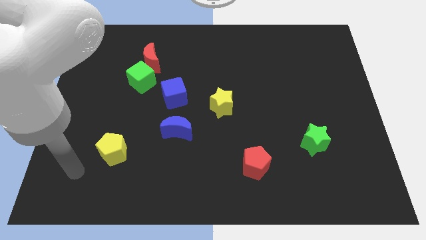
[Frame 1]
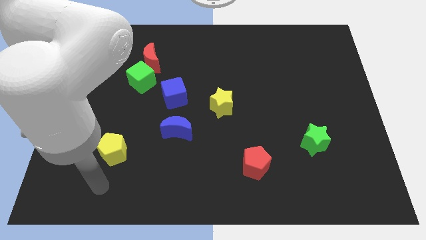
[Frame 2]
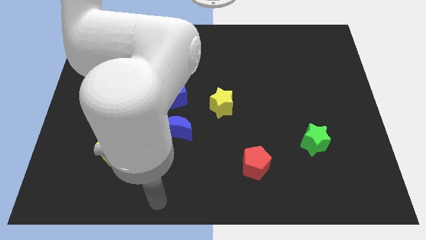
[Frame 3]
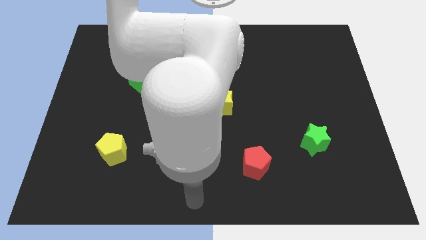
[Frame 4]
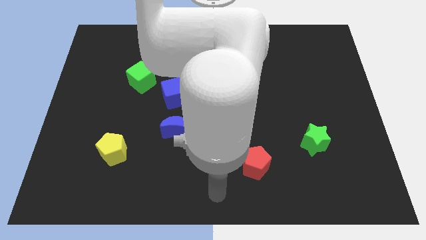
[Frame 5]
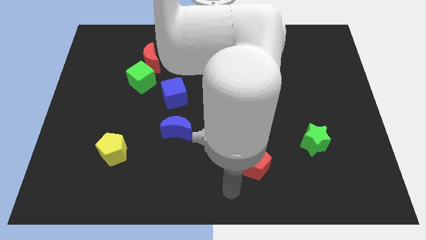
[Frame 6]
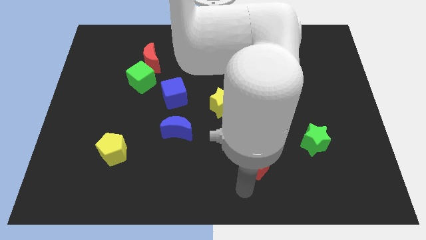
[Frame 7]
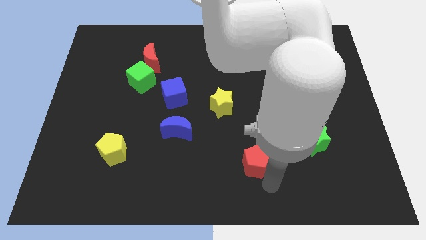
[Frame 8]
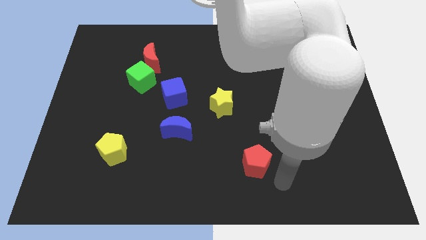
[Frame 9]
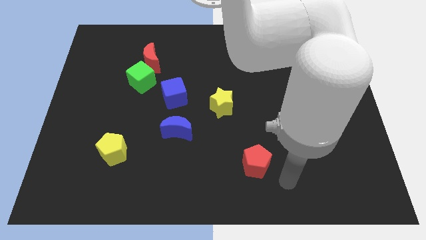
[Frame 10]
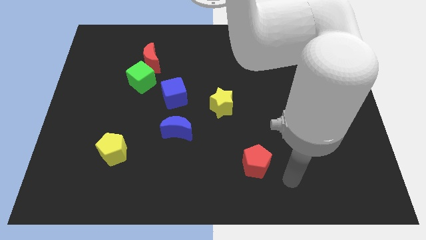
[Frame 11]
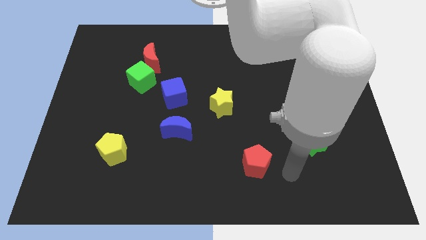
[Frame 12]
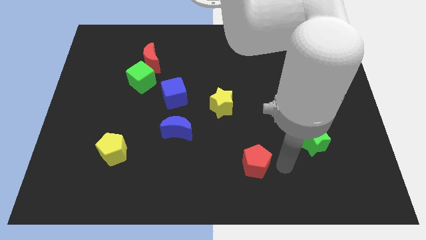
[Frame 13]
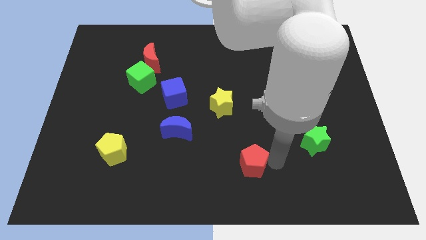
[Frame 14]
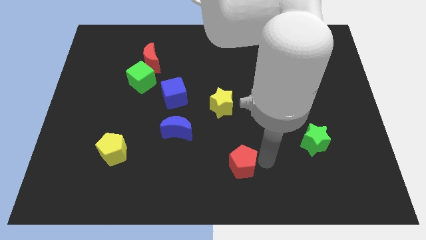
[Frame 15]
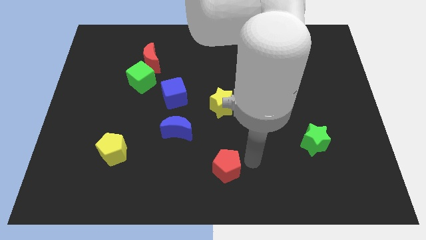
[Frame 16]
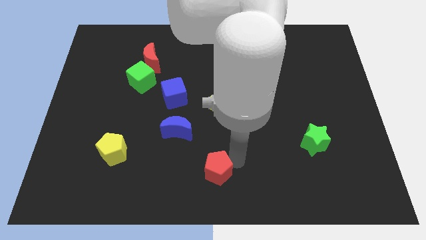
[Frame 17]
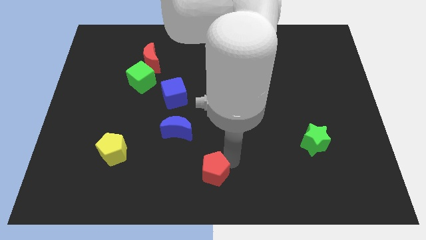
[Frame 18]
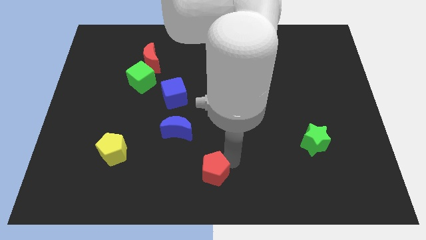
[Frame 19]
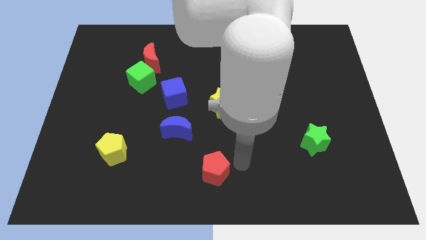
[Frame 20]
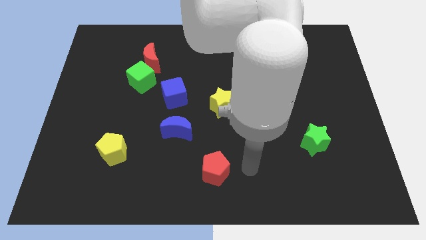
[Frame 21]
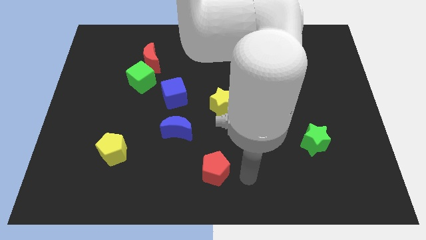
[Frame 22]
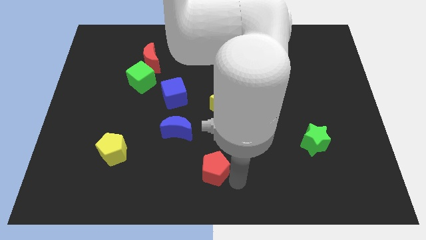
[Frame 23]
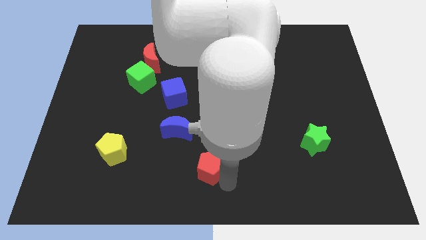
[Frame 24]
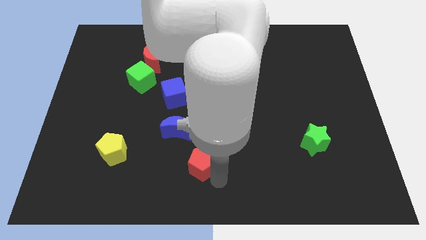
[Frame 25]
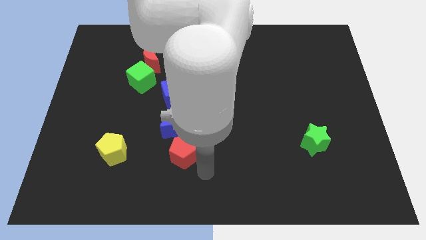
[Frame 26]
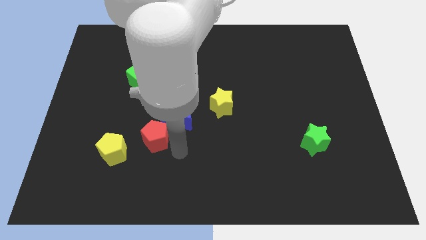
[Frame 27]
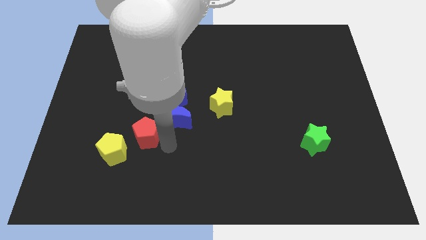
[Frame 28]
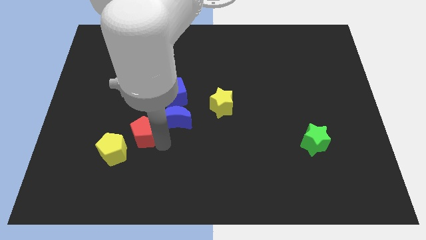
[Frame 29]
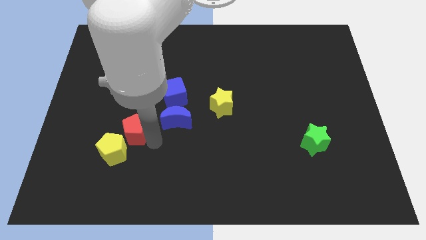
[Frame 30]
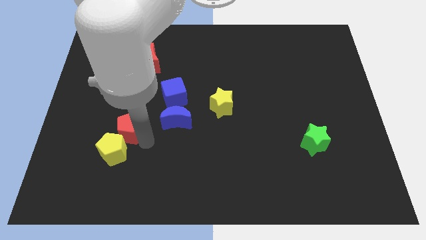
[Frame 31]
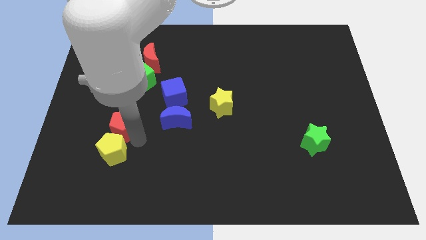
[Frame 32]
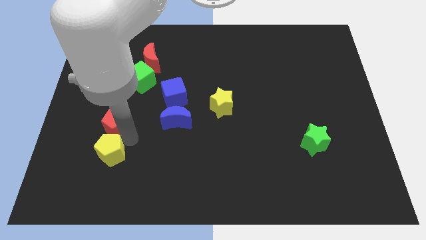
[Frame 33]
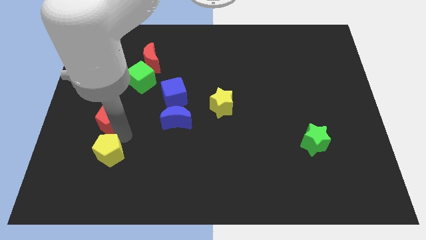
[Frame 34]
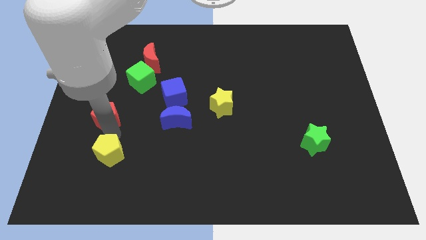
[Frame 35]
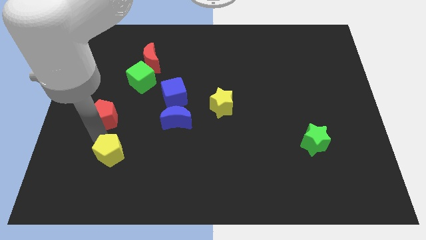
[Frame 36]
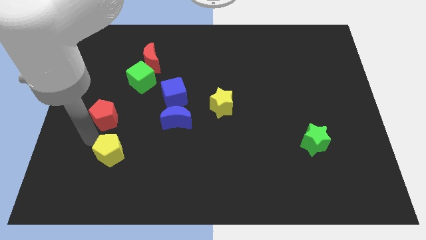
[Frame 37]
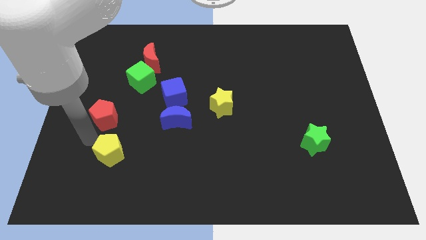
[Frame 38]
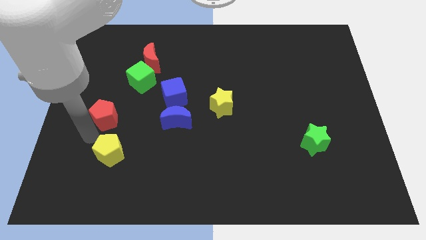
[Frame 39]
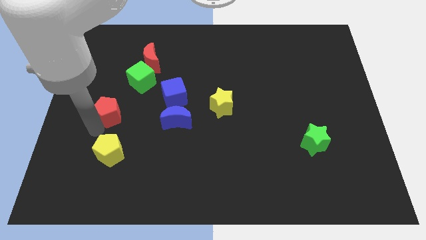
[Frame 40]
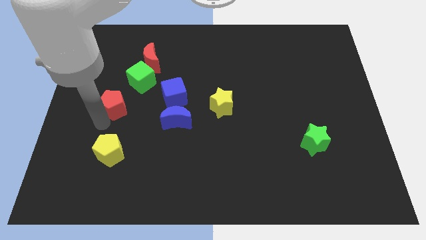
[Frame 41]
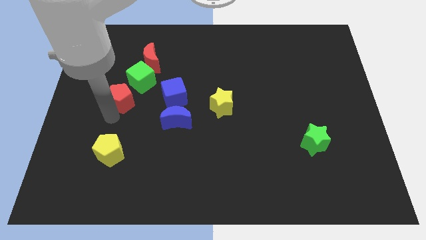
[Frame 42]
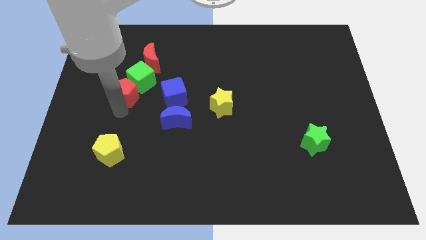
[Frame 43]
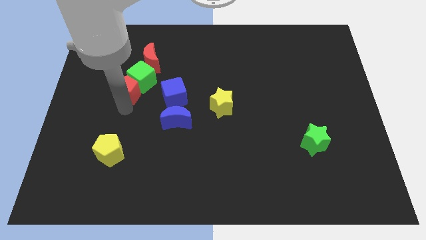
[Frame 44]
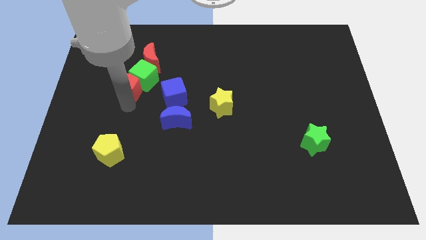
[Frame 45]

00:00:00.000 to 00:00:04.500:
push the red pentagon close to the green cube

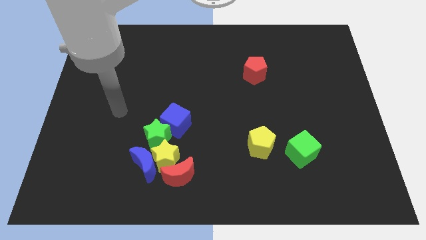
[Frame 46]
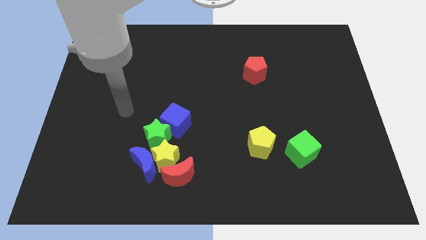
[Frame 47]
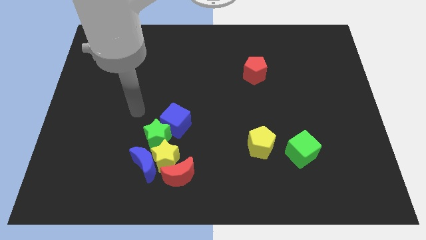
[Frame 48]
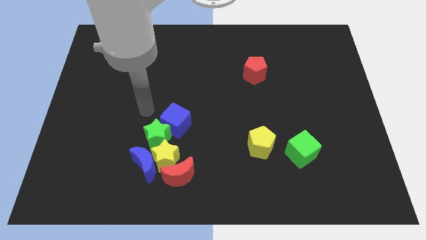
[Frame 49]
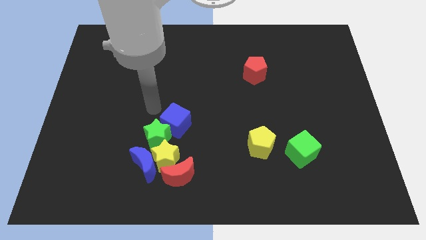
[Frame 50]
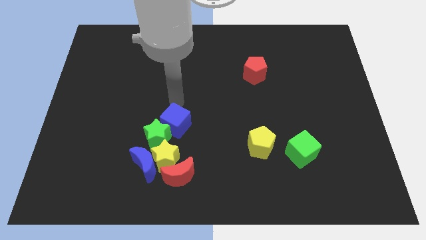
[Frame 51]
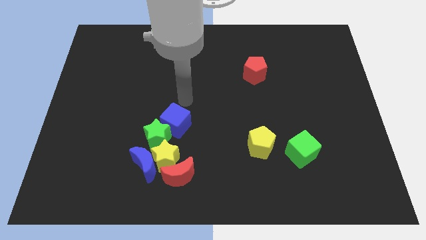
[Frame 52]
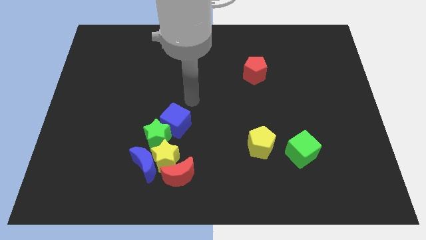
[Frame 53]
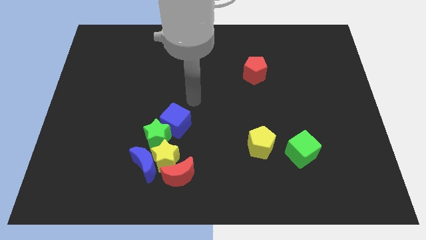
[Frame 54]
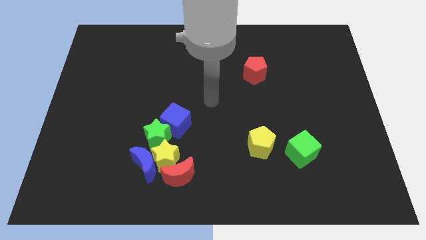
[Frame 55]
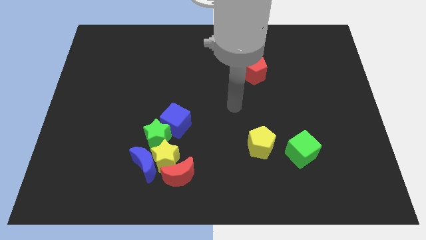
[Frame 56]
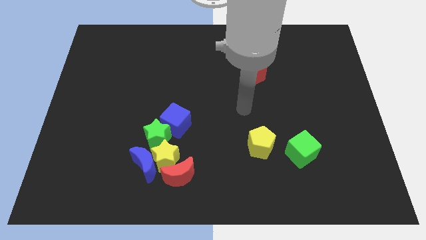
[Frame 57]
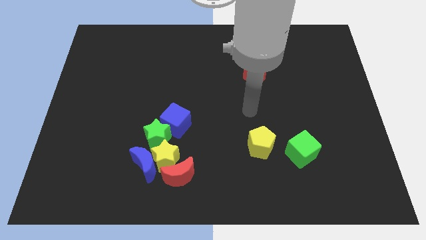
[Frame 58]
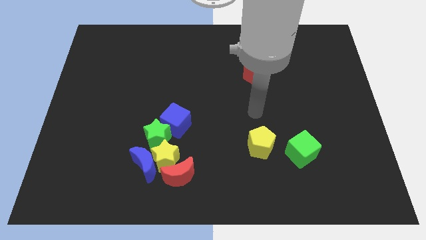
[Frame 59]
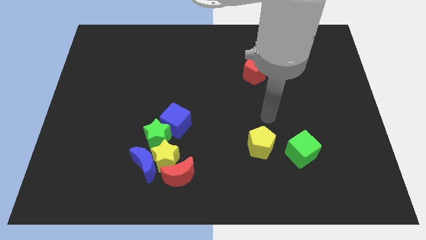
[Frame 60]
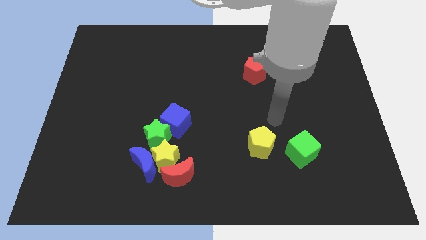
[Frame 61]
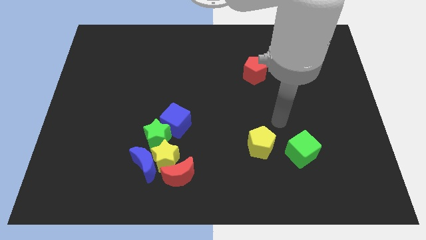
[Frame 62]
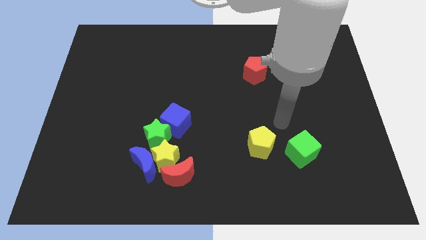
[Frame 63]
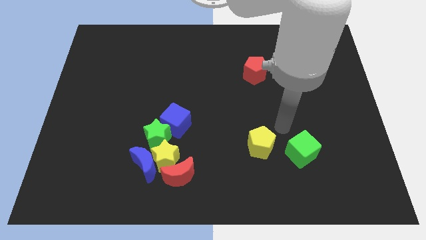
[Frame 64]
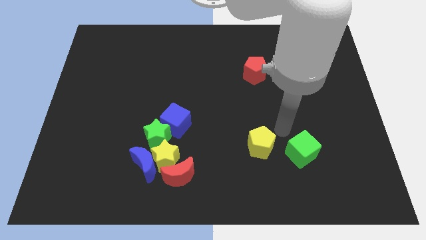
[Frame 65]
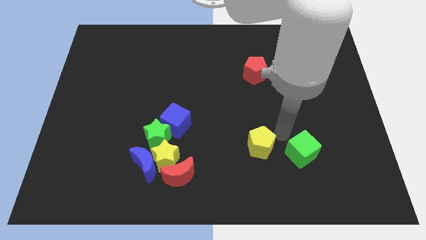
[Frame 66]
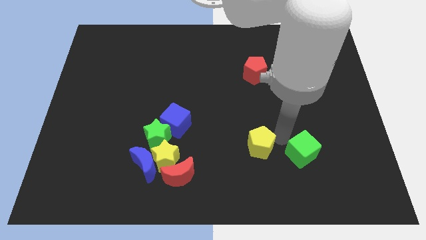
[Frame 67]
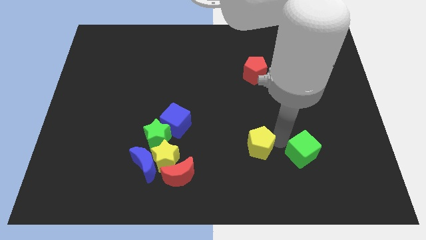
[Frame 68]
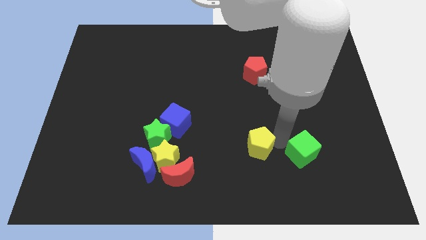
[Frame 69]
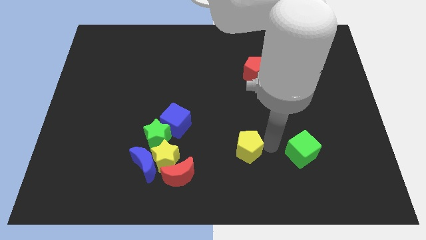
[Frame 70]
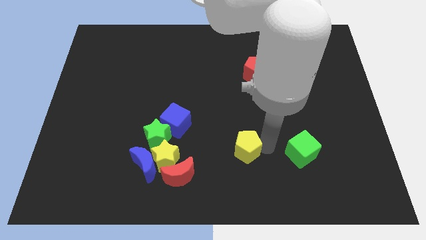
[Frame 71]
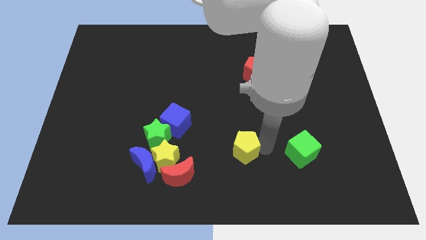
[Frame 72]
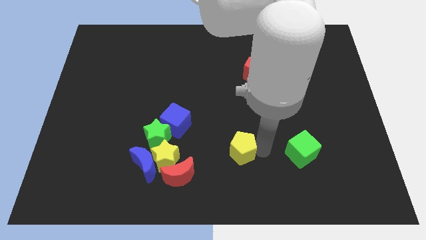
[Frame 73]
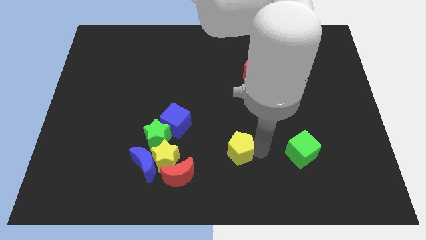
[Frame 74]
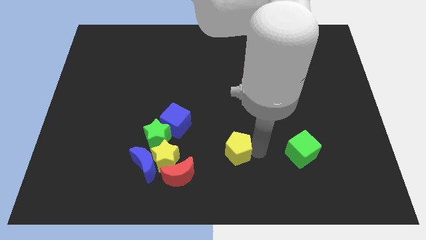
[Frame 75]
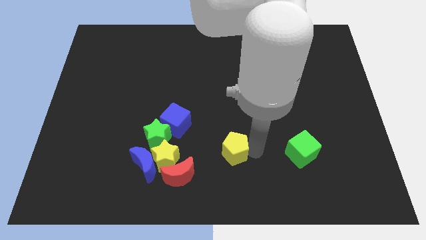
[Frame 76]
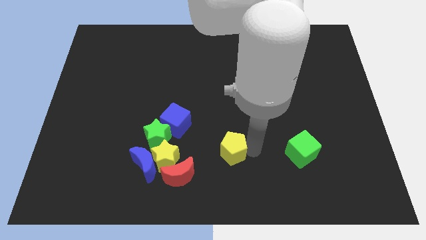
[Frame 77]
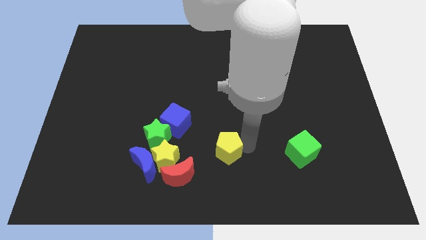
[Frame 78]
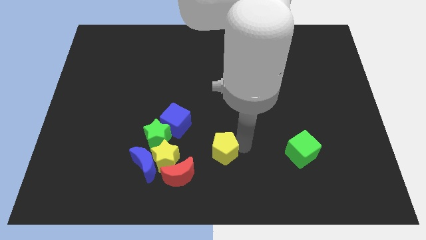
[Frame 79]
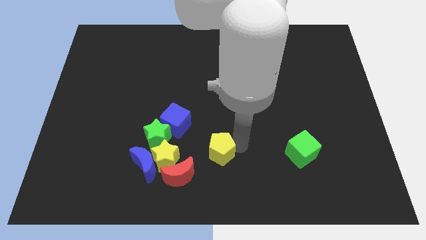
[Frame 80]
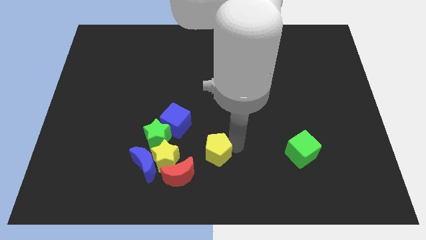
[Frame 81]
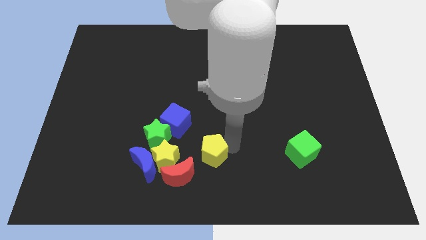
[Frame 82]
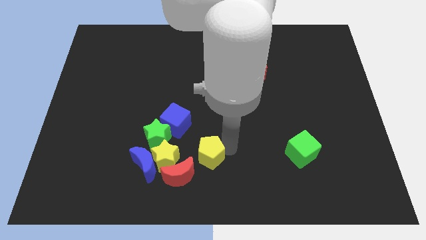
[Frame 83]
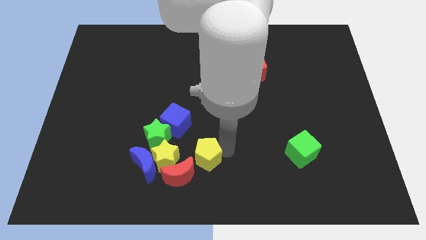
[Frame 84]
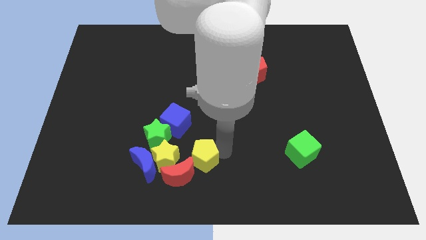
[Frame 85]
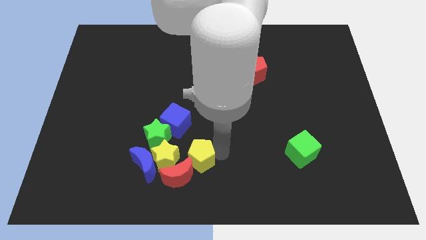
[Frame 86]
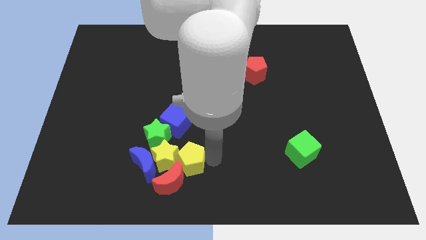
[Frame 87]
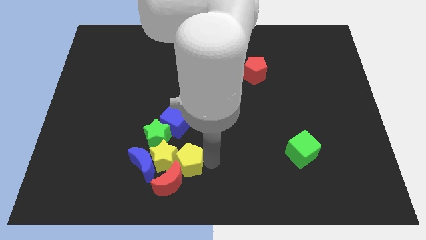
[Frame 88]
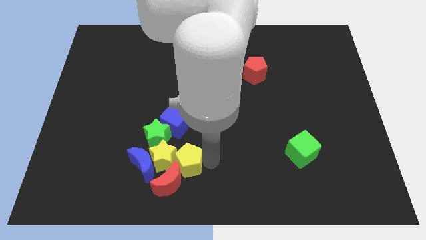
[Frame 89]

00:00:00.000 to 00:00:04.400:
slide the yellow pentagon towards the red moon
